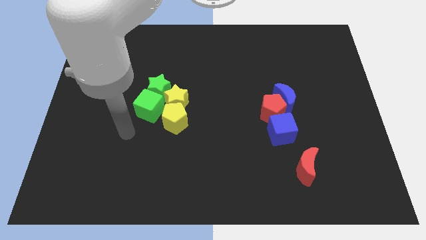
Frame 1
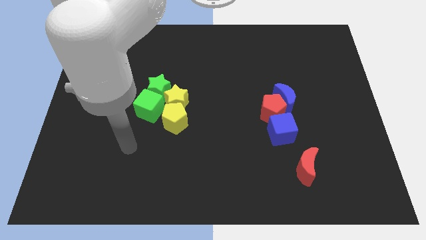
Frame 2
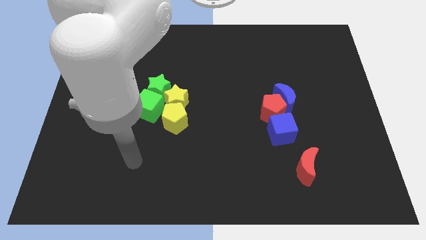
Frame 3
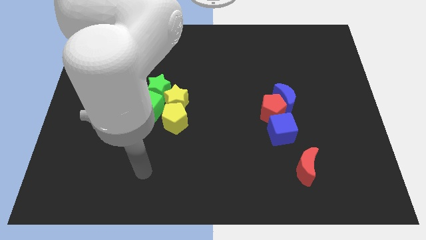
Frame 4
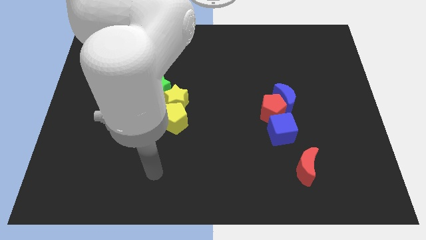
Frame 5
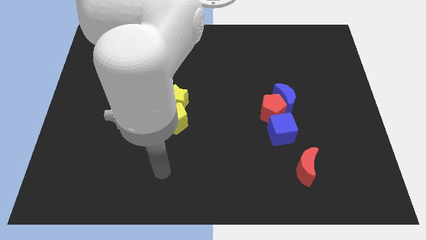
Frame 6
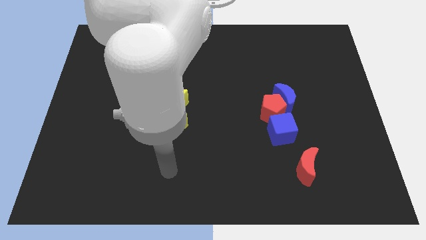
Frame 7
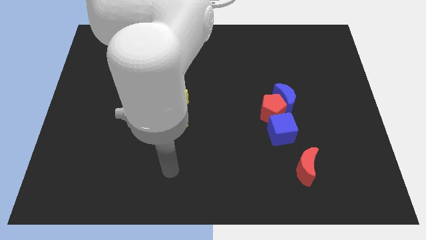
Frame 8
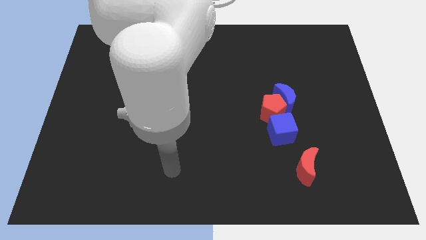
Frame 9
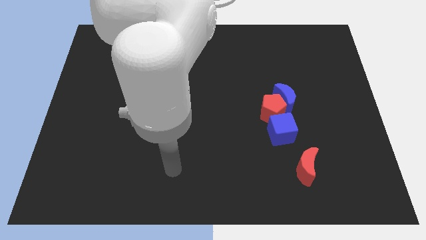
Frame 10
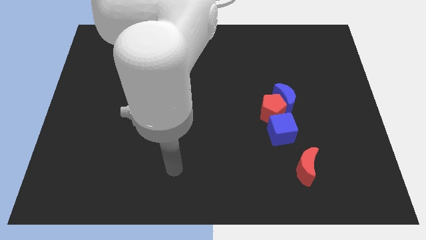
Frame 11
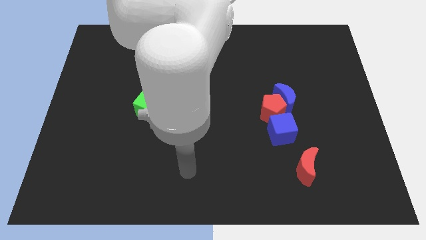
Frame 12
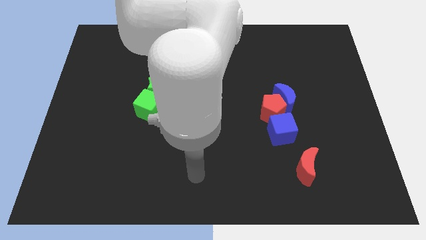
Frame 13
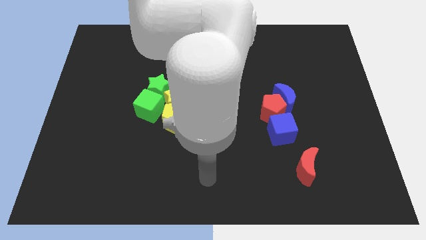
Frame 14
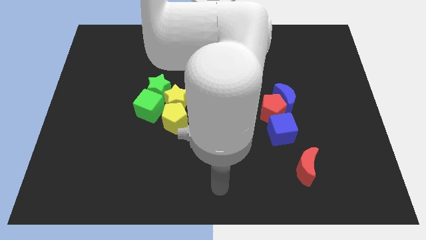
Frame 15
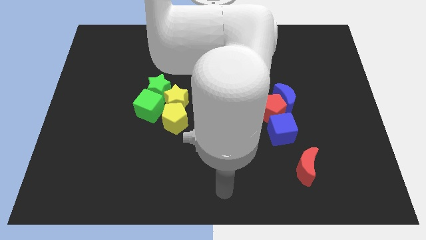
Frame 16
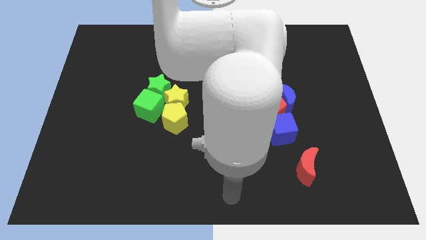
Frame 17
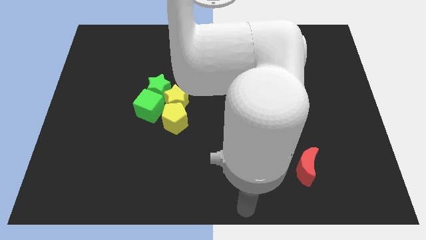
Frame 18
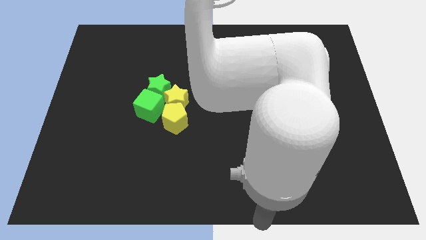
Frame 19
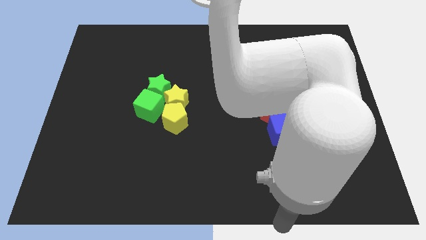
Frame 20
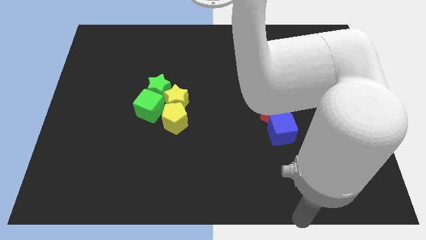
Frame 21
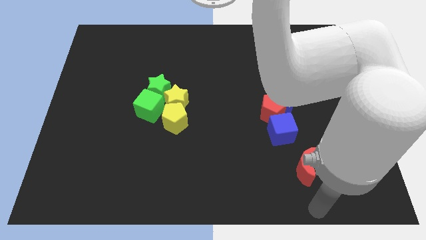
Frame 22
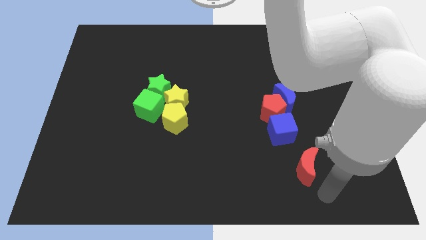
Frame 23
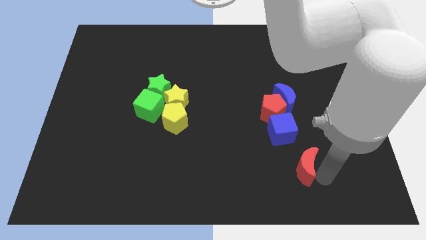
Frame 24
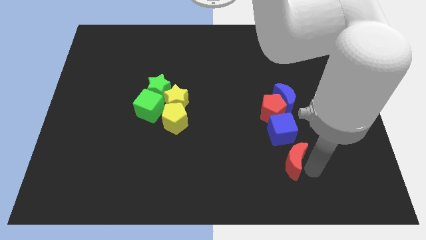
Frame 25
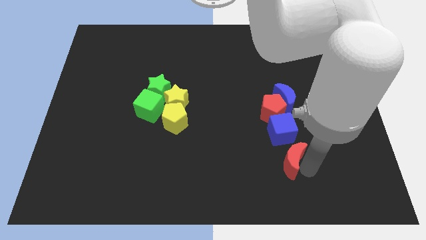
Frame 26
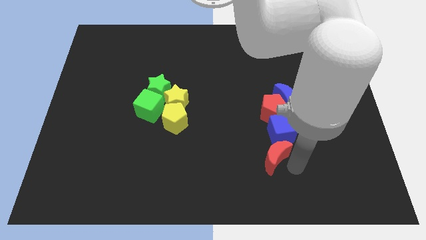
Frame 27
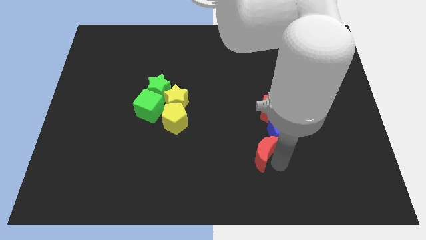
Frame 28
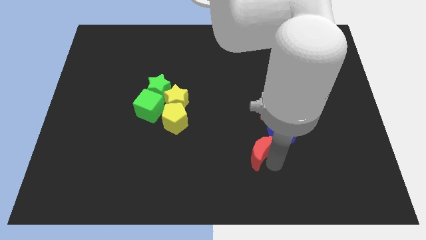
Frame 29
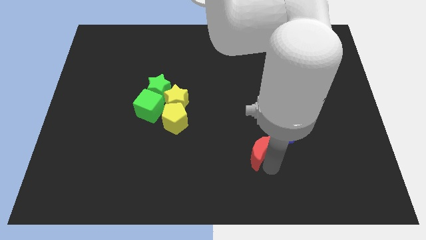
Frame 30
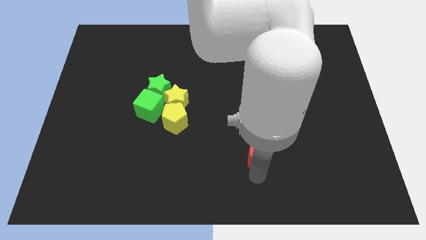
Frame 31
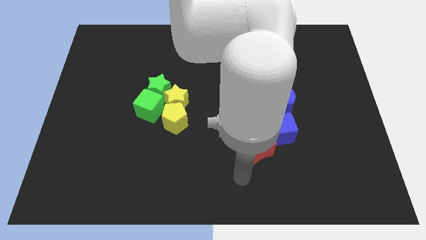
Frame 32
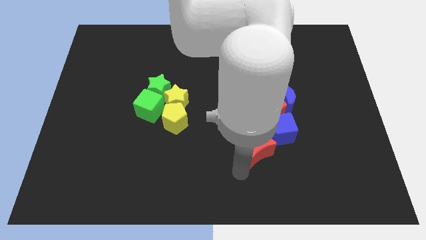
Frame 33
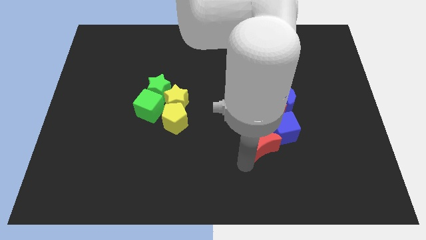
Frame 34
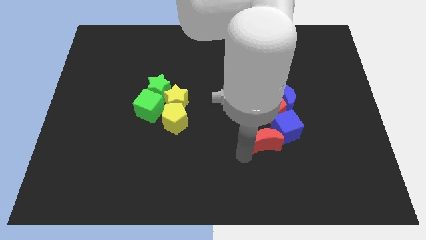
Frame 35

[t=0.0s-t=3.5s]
place red moon in diagonal left bottom diagonal position to the blue cube

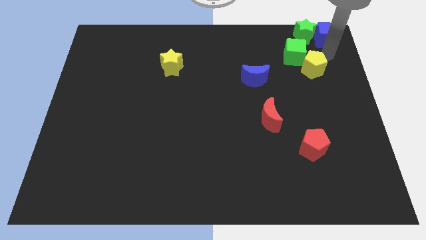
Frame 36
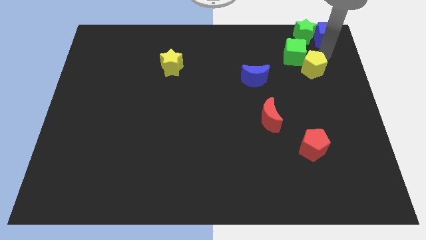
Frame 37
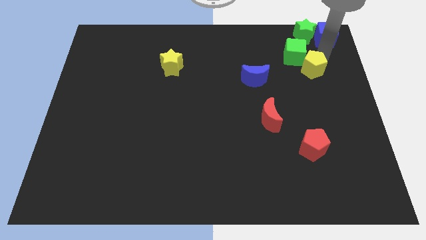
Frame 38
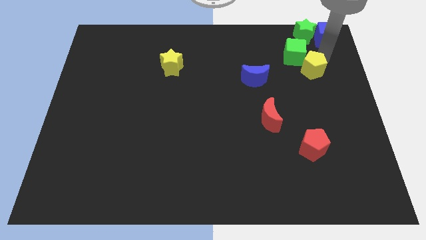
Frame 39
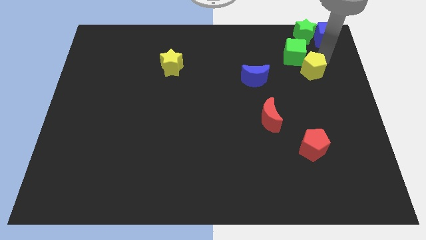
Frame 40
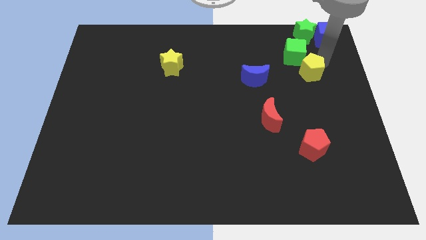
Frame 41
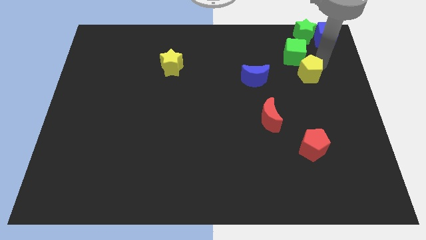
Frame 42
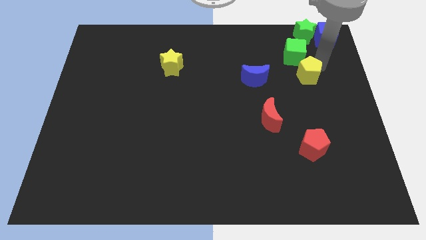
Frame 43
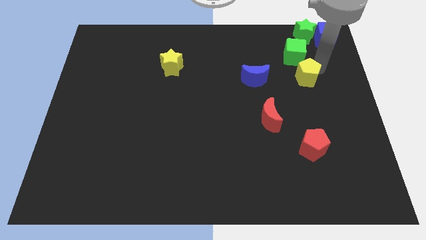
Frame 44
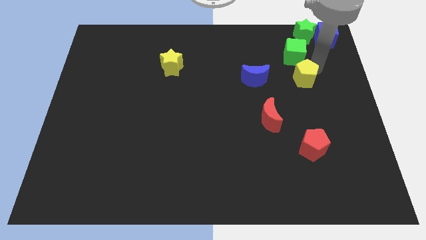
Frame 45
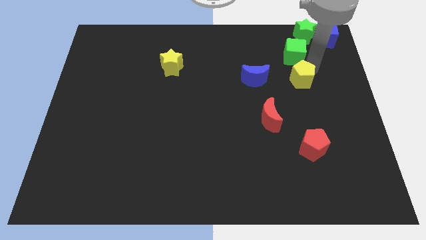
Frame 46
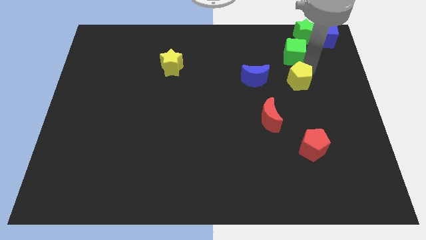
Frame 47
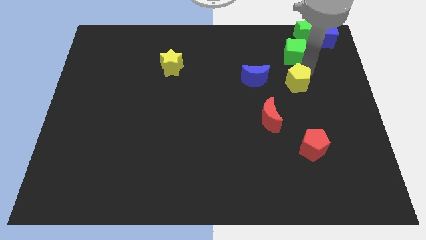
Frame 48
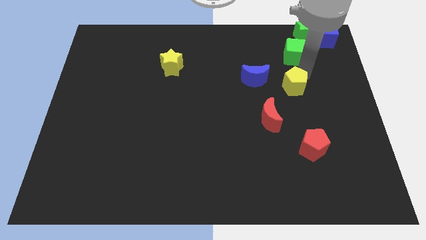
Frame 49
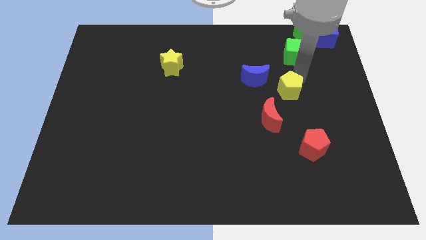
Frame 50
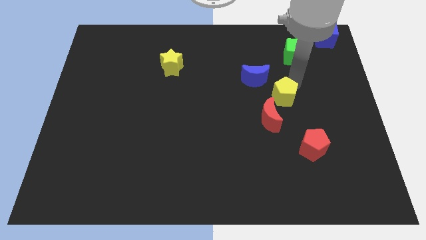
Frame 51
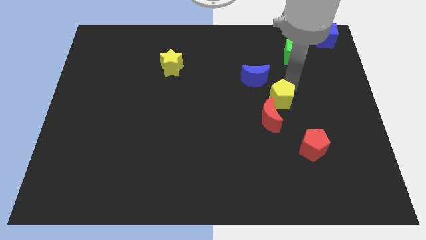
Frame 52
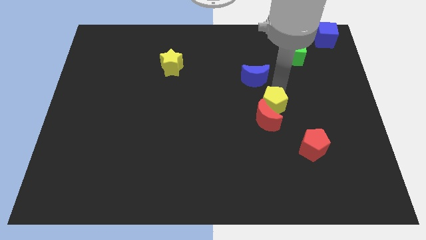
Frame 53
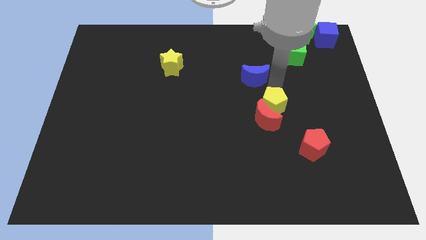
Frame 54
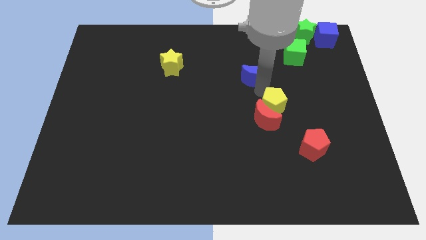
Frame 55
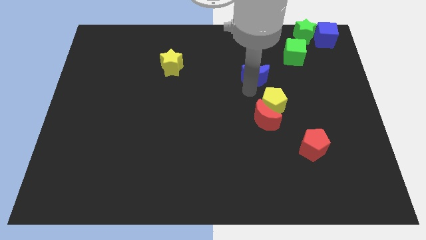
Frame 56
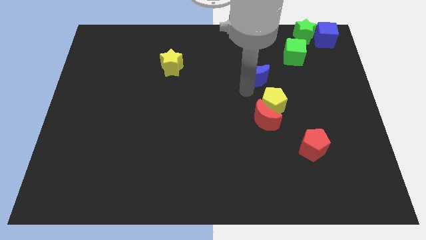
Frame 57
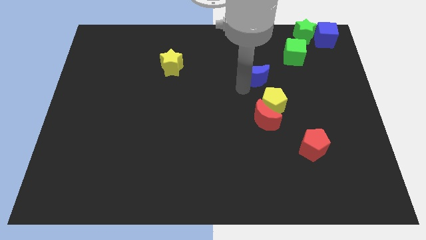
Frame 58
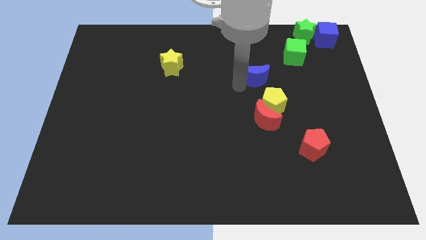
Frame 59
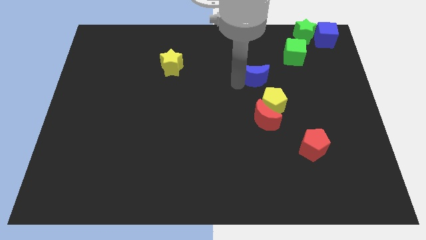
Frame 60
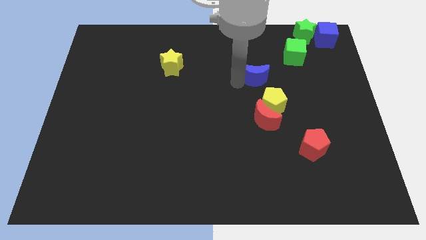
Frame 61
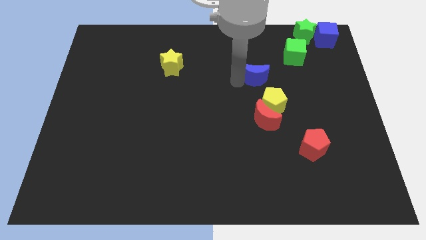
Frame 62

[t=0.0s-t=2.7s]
move the yellow pentagon above the red moon

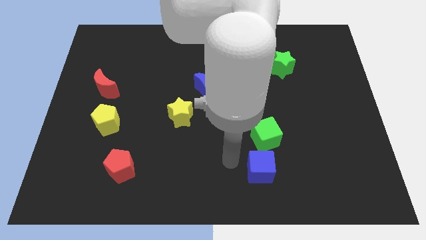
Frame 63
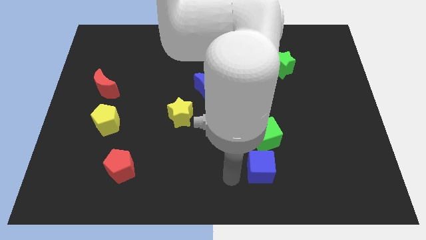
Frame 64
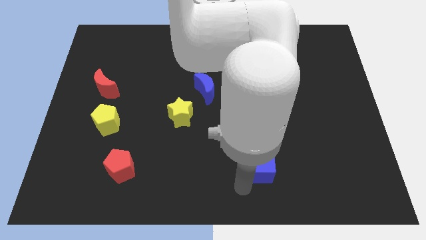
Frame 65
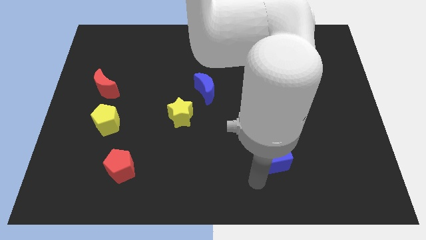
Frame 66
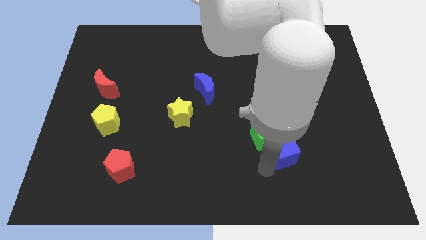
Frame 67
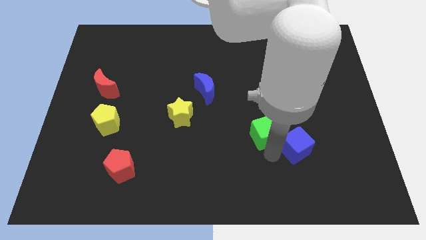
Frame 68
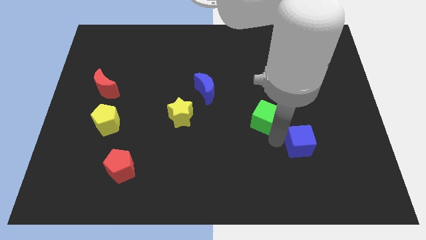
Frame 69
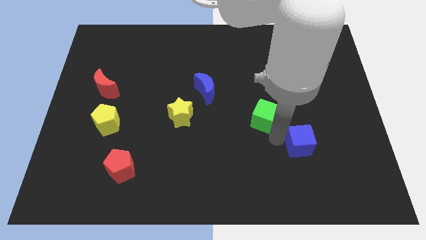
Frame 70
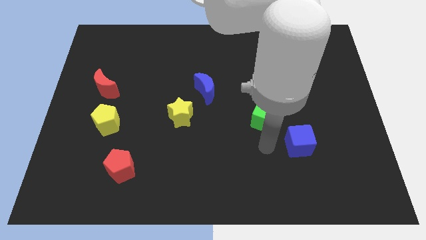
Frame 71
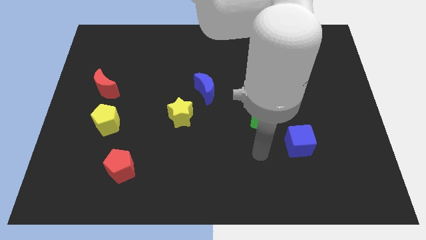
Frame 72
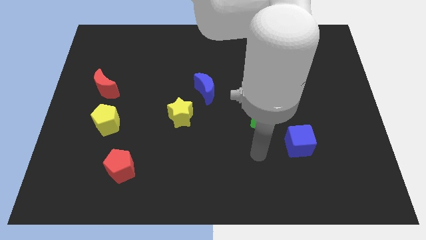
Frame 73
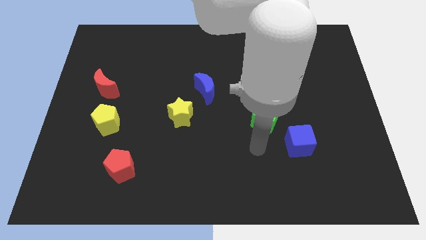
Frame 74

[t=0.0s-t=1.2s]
separate the green and blue cubes from each other

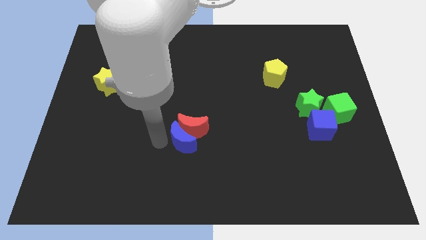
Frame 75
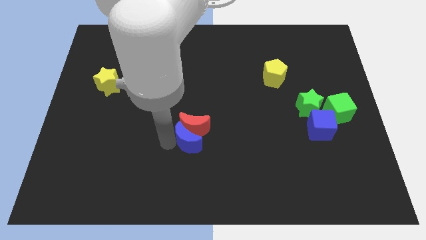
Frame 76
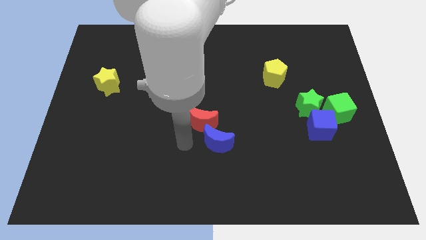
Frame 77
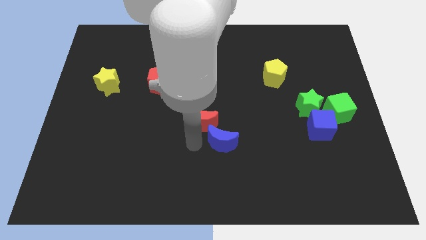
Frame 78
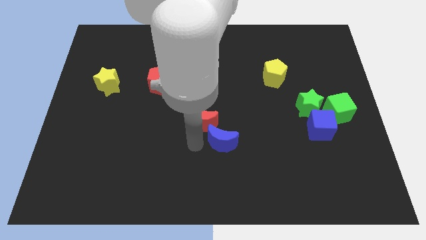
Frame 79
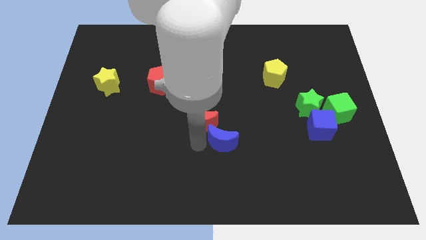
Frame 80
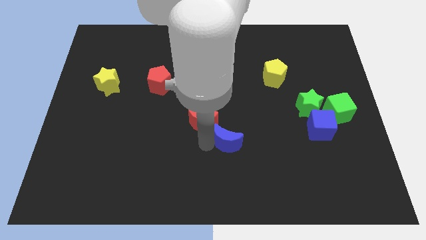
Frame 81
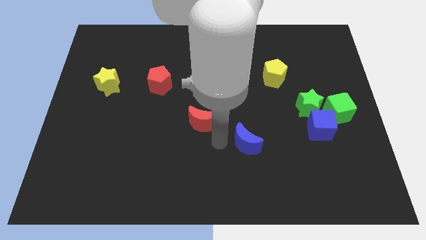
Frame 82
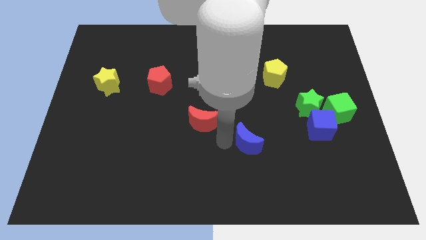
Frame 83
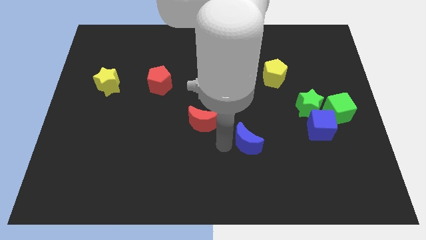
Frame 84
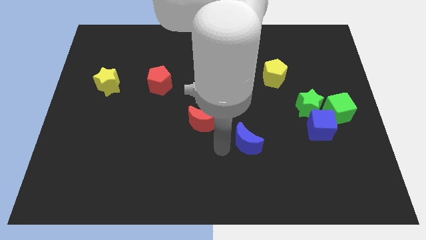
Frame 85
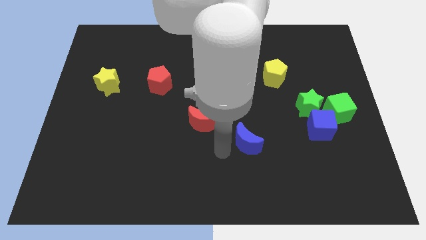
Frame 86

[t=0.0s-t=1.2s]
separate the blue moon from the red moon

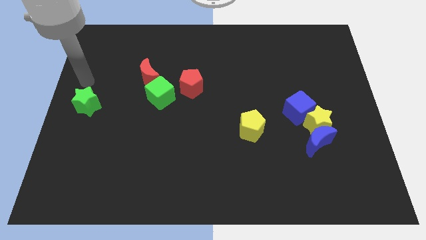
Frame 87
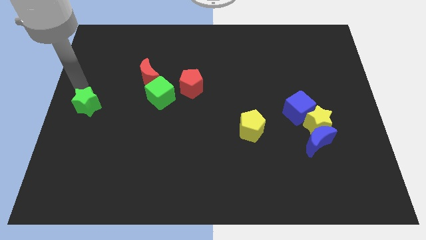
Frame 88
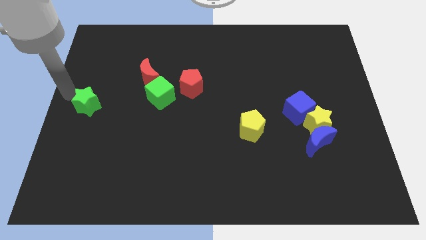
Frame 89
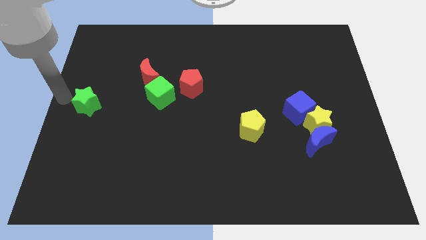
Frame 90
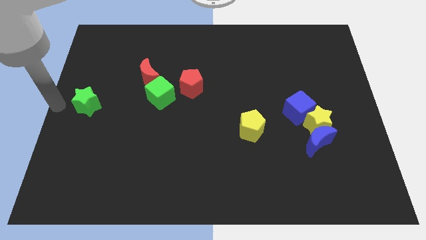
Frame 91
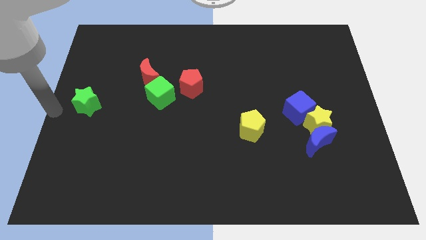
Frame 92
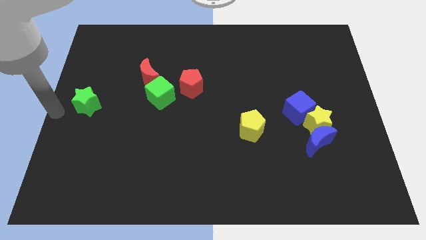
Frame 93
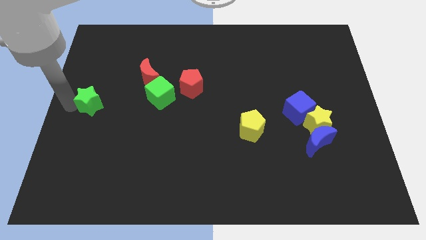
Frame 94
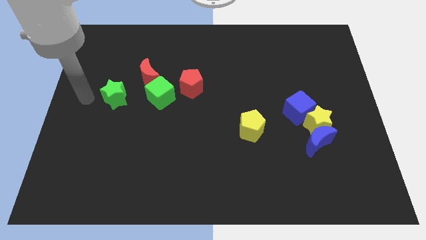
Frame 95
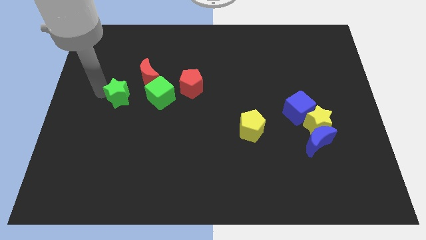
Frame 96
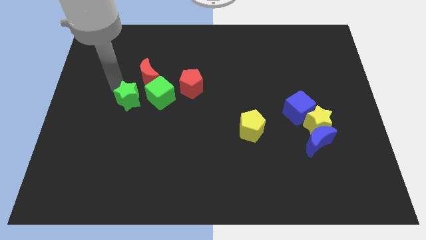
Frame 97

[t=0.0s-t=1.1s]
drag the green star towards the left side of the green cube
